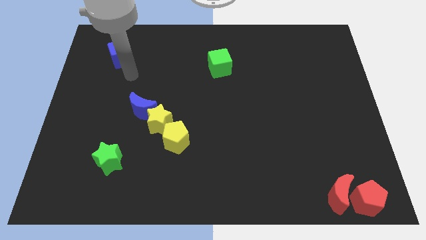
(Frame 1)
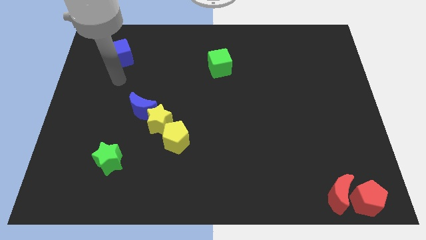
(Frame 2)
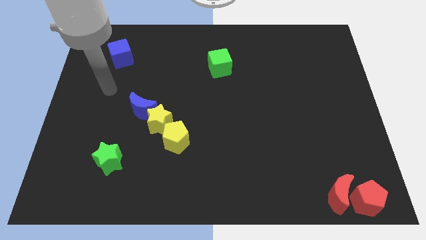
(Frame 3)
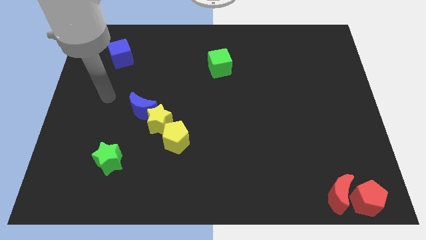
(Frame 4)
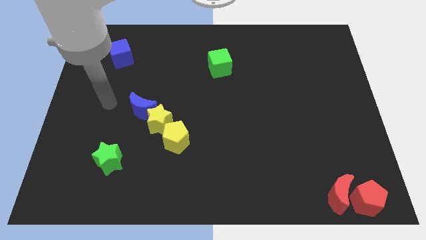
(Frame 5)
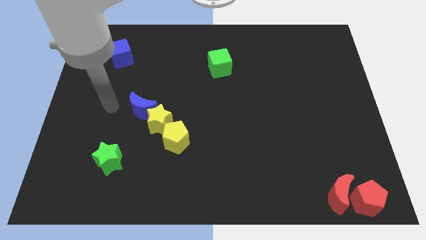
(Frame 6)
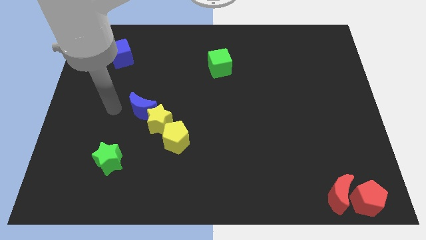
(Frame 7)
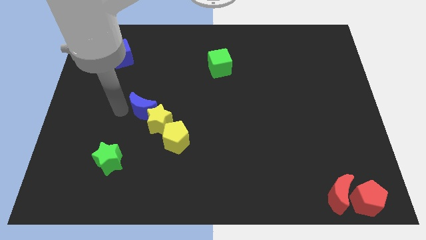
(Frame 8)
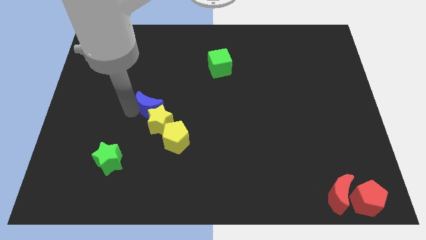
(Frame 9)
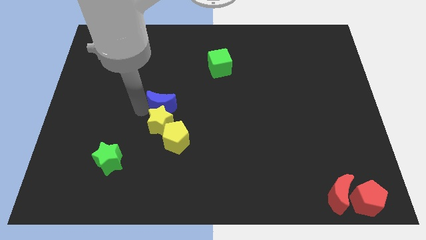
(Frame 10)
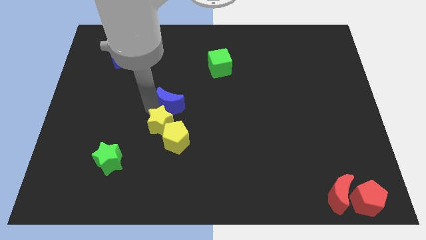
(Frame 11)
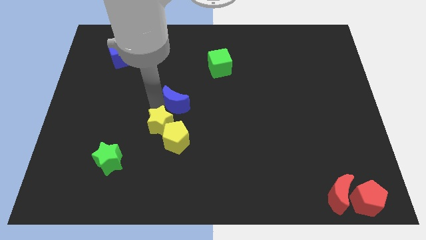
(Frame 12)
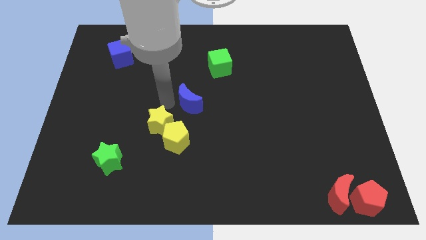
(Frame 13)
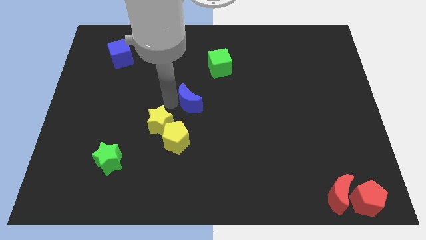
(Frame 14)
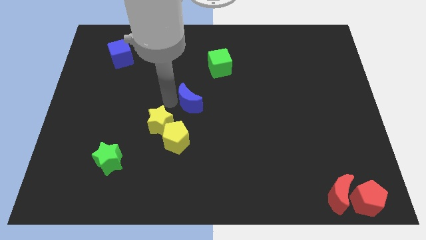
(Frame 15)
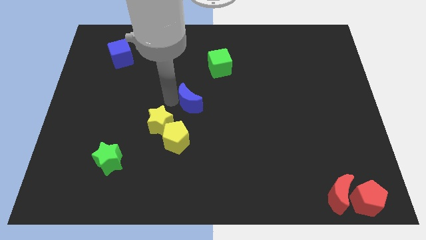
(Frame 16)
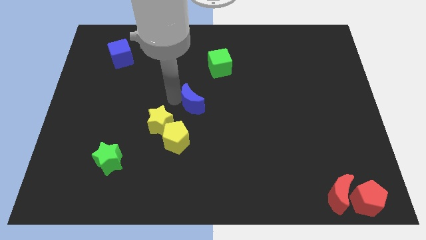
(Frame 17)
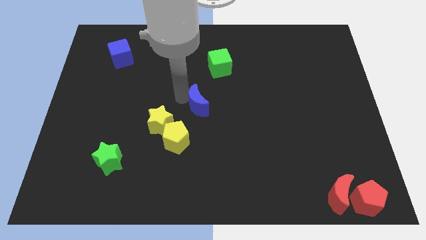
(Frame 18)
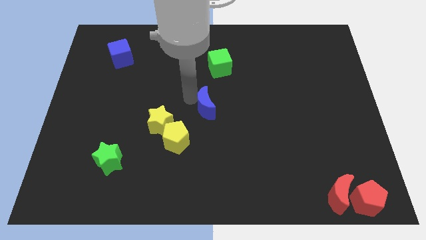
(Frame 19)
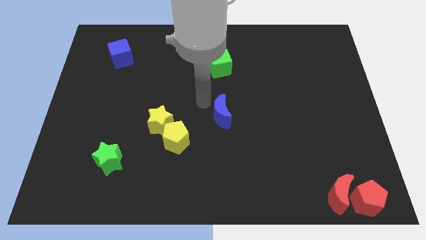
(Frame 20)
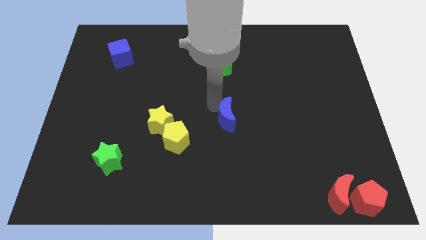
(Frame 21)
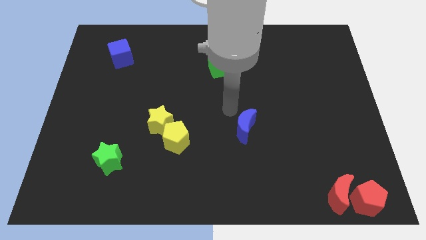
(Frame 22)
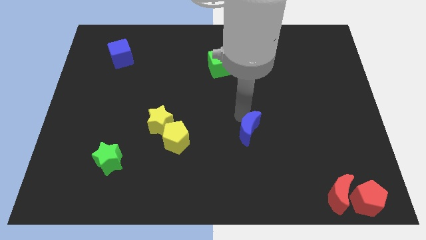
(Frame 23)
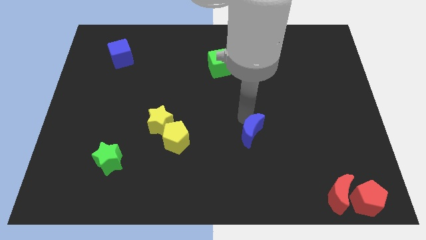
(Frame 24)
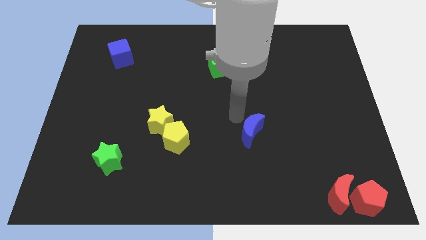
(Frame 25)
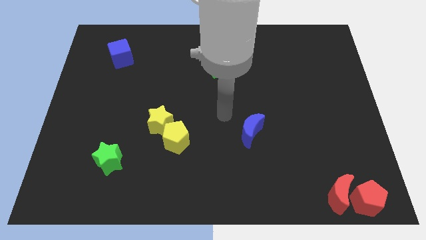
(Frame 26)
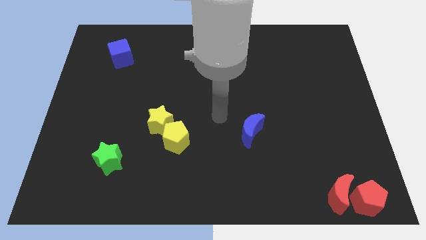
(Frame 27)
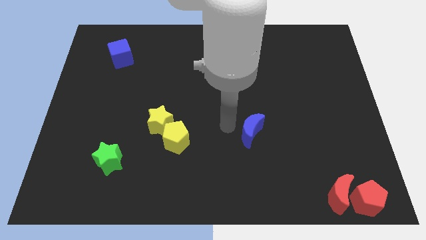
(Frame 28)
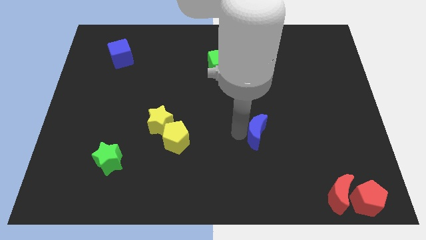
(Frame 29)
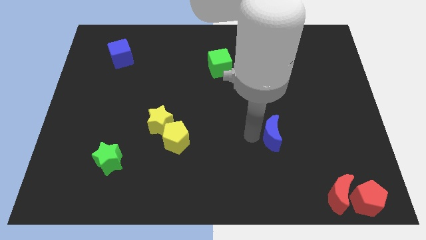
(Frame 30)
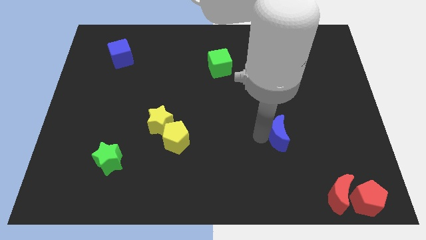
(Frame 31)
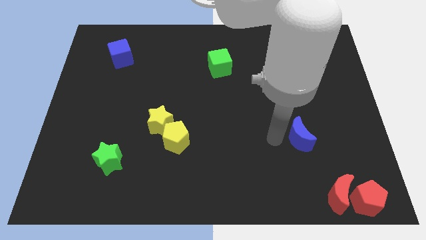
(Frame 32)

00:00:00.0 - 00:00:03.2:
move the blue moon horizontal to the yellow pentagon on the right side

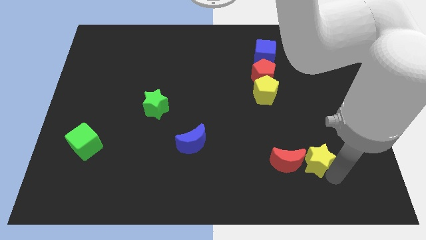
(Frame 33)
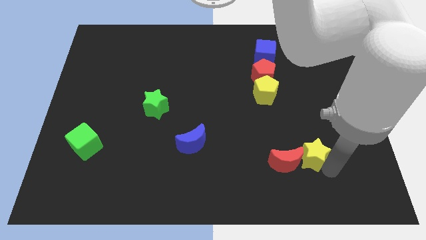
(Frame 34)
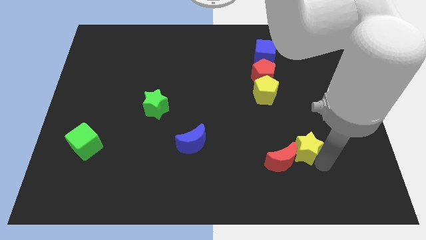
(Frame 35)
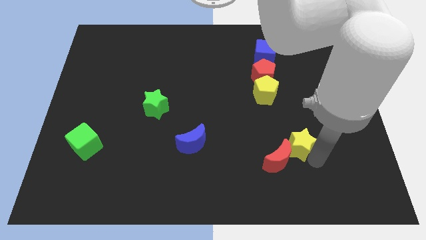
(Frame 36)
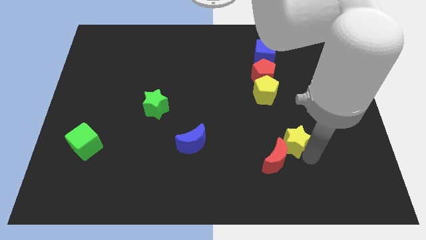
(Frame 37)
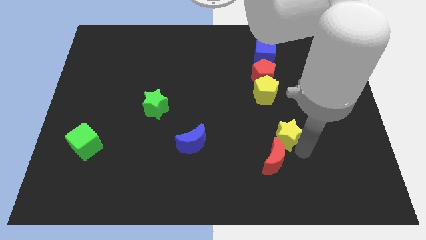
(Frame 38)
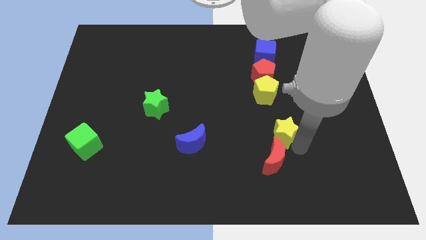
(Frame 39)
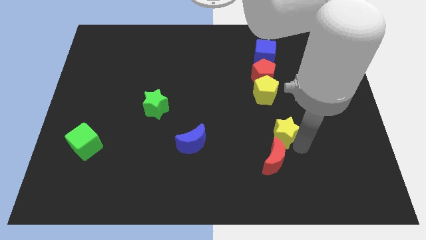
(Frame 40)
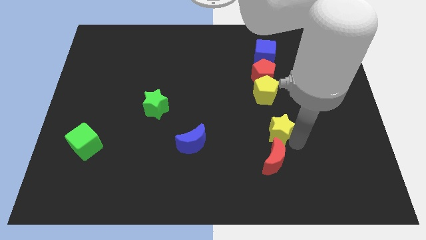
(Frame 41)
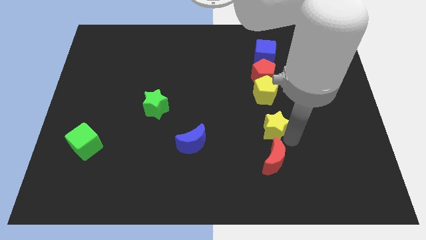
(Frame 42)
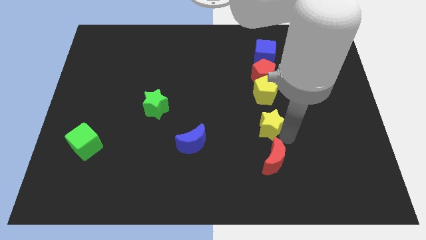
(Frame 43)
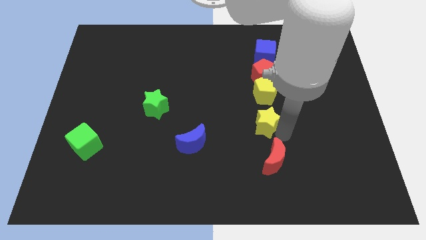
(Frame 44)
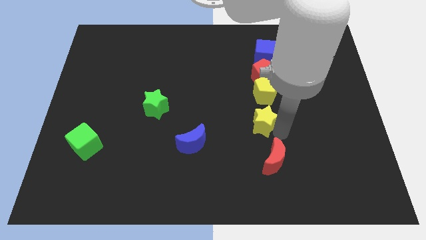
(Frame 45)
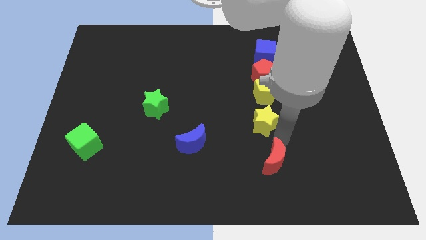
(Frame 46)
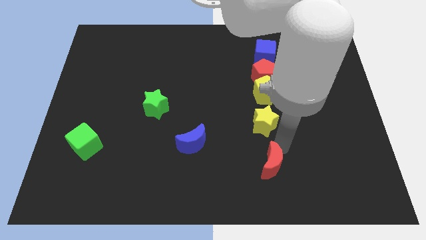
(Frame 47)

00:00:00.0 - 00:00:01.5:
place yellow star to the bottom of yellow pentagon

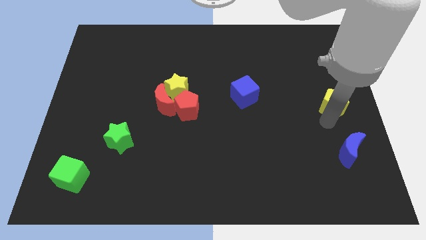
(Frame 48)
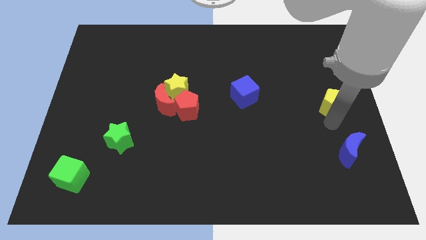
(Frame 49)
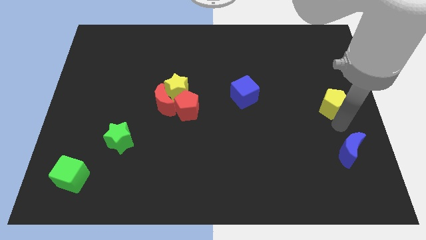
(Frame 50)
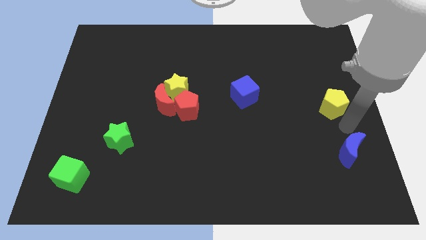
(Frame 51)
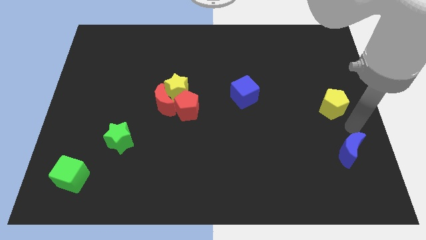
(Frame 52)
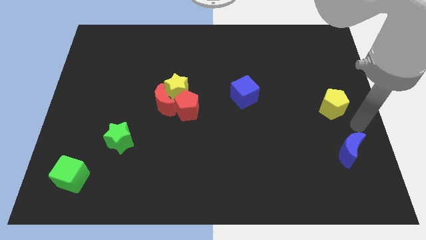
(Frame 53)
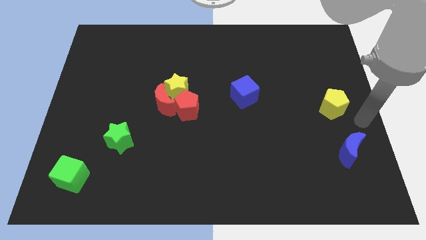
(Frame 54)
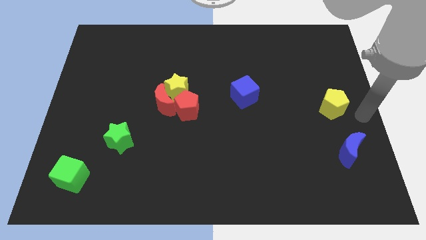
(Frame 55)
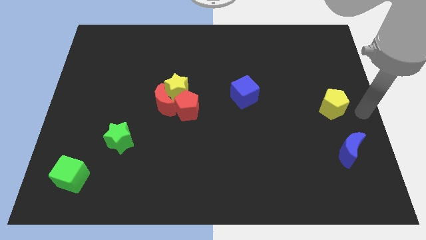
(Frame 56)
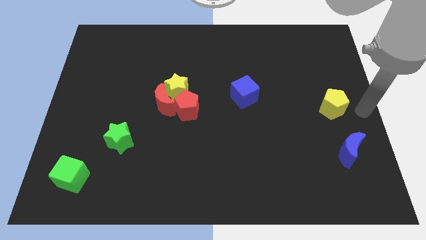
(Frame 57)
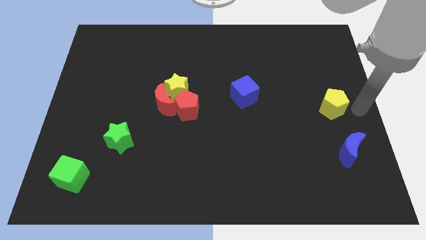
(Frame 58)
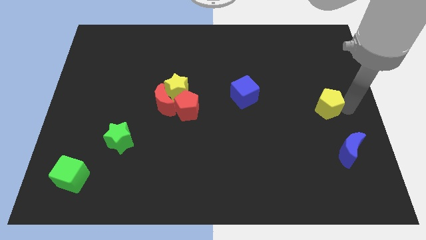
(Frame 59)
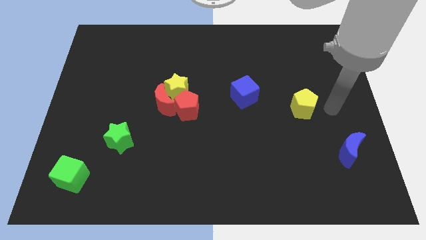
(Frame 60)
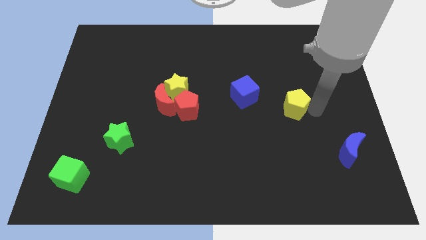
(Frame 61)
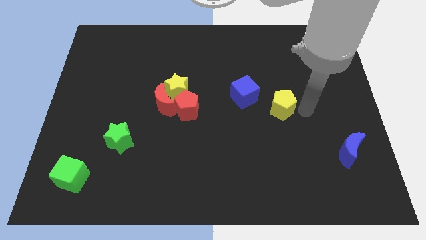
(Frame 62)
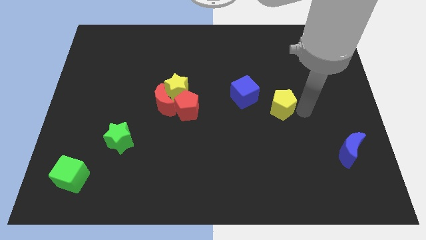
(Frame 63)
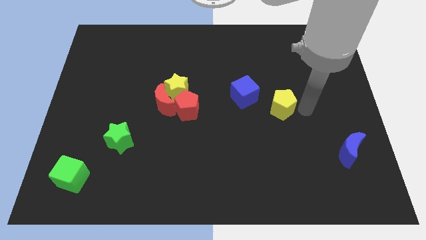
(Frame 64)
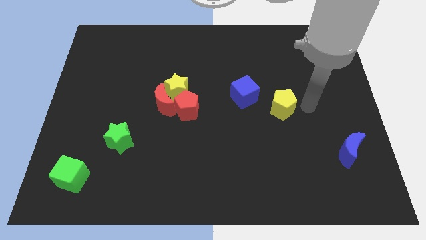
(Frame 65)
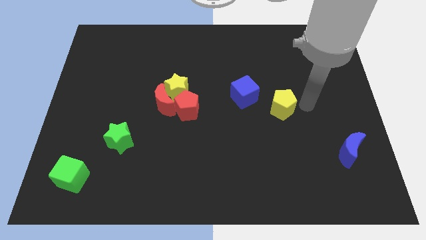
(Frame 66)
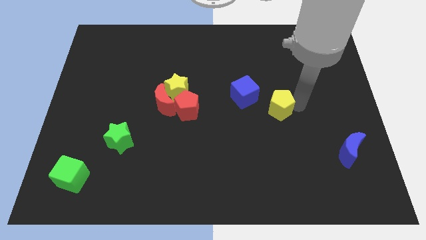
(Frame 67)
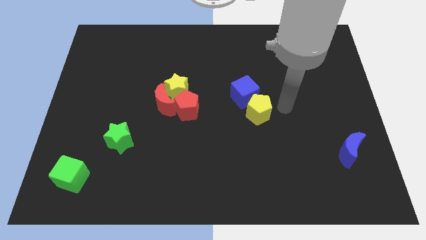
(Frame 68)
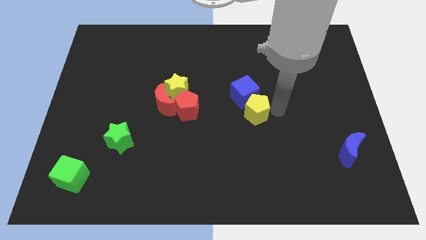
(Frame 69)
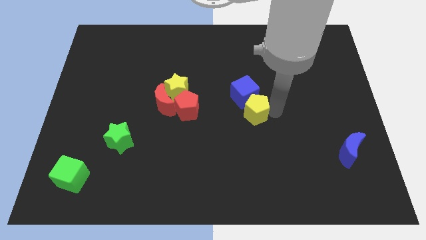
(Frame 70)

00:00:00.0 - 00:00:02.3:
move the yellow pentagon diagonal below blue cube

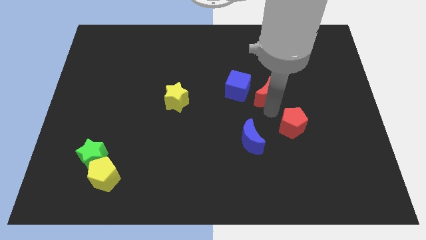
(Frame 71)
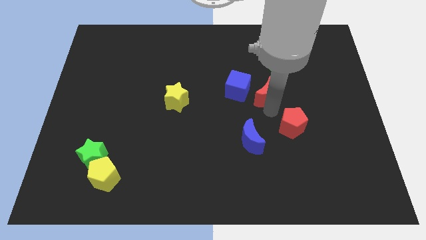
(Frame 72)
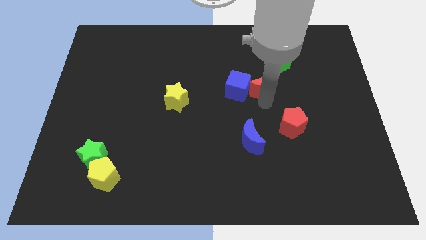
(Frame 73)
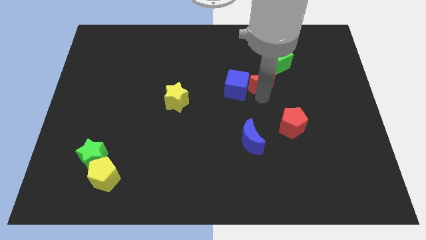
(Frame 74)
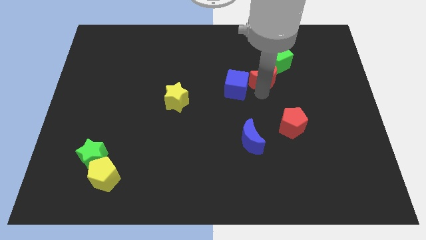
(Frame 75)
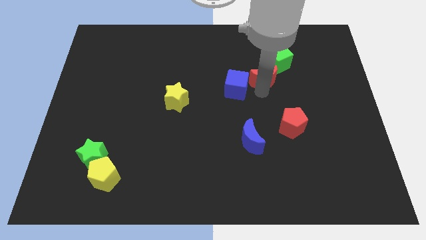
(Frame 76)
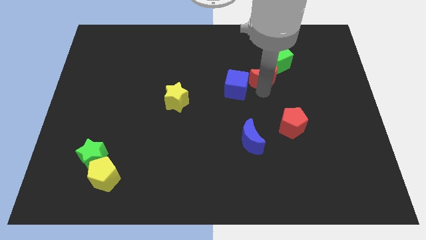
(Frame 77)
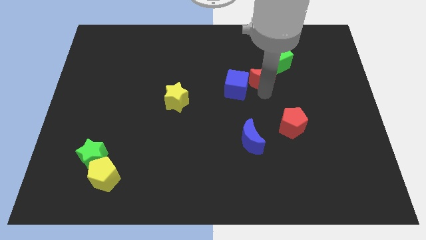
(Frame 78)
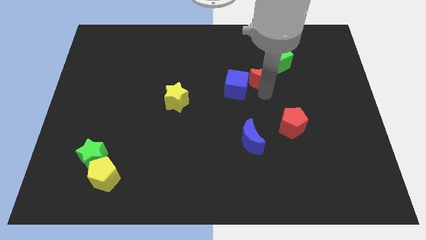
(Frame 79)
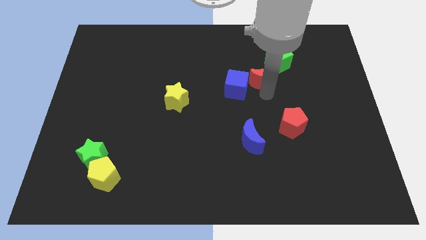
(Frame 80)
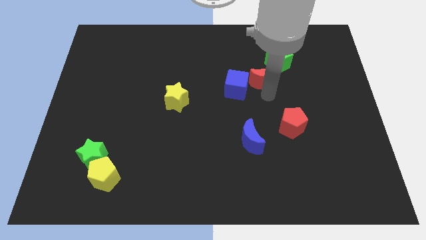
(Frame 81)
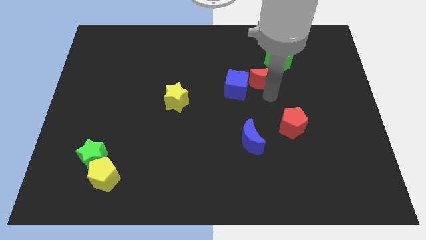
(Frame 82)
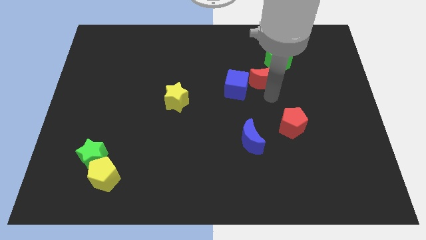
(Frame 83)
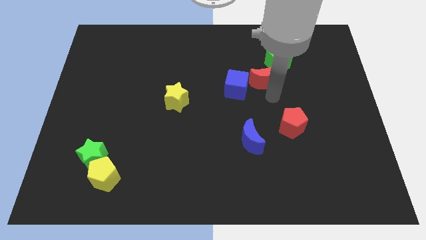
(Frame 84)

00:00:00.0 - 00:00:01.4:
put the red moon at the top right of the blue cube

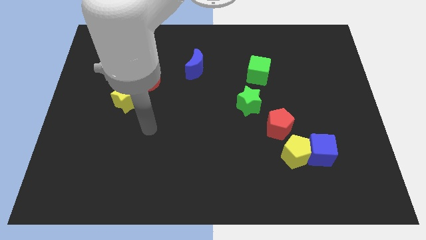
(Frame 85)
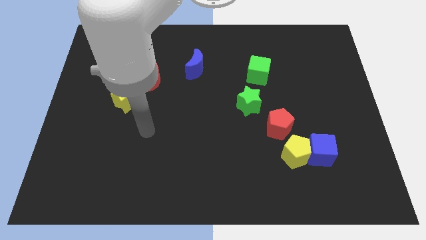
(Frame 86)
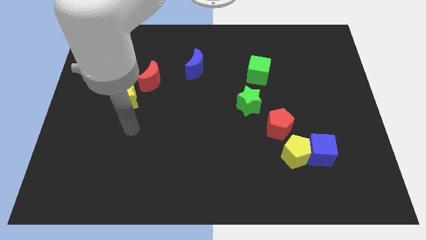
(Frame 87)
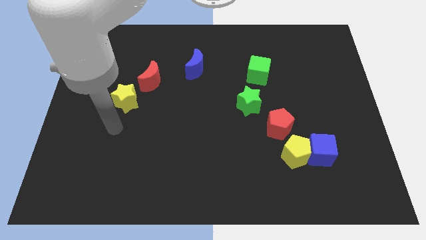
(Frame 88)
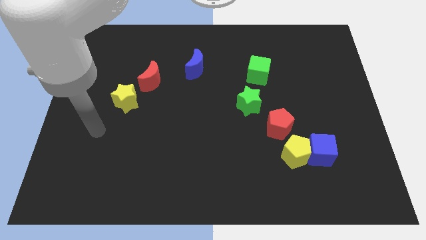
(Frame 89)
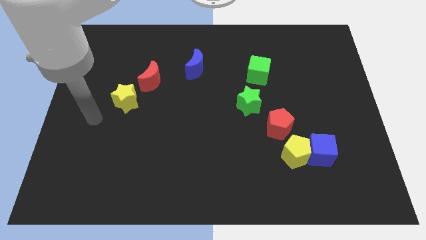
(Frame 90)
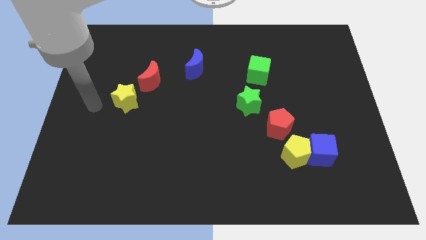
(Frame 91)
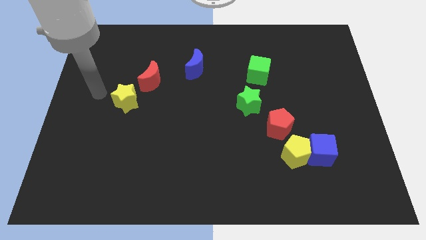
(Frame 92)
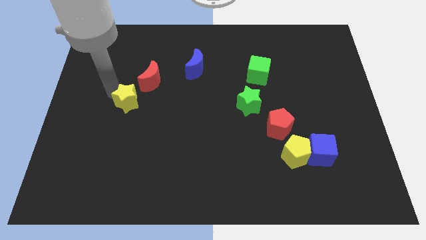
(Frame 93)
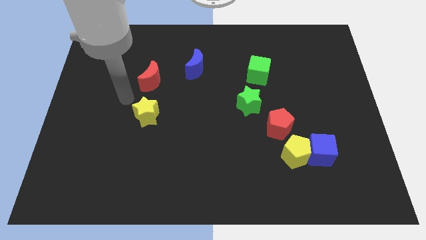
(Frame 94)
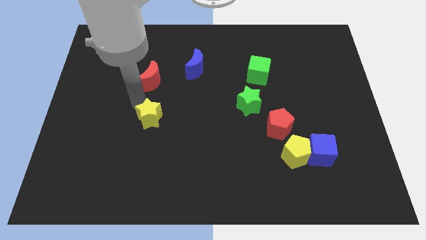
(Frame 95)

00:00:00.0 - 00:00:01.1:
place the yellow star below the red crescent
